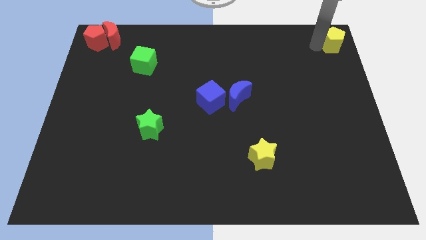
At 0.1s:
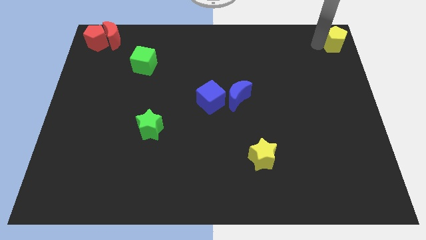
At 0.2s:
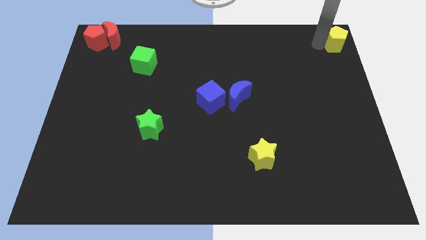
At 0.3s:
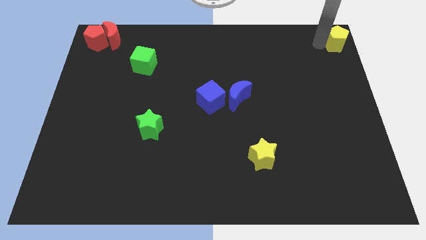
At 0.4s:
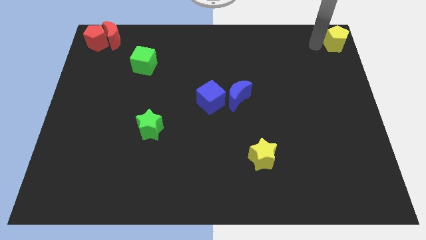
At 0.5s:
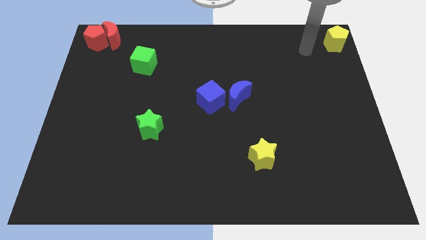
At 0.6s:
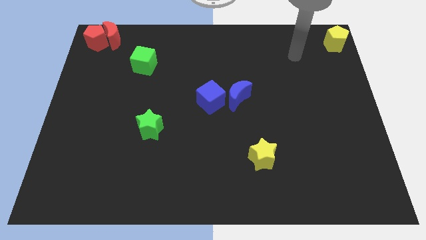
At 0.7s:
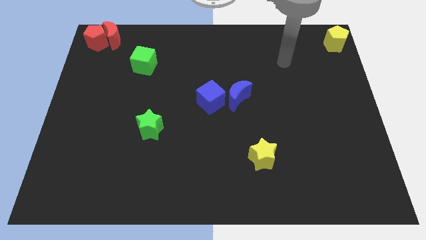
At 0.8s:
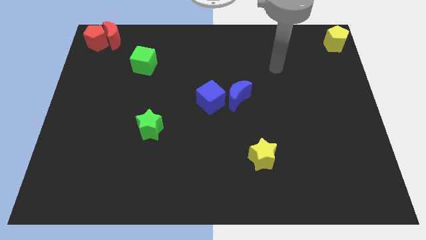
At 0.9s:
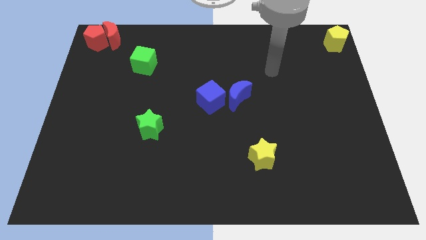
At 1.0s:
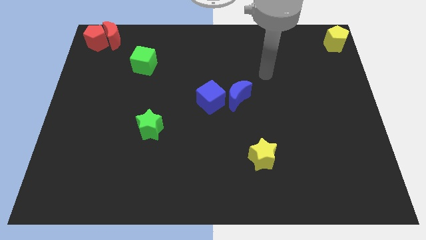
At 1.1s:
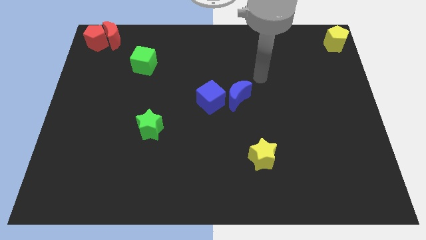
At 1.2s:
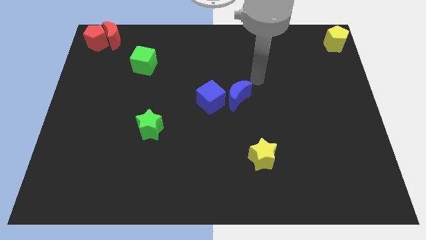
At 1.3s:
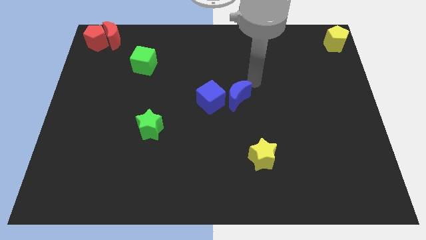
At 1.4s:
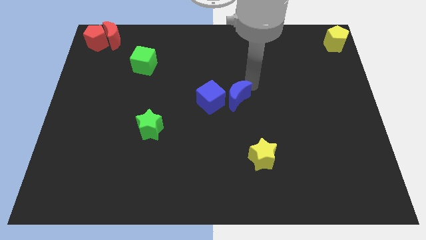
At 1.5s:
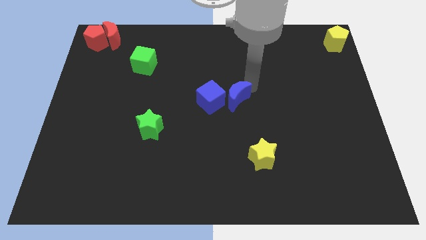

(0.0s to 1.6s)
move your arm away from the yellow pentagon

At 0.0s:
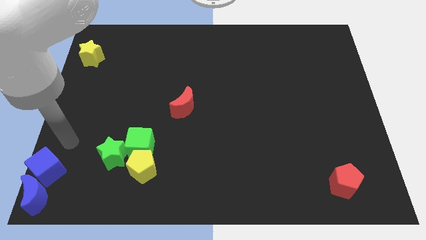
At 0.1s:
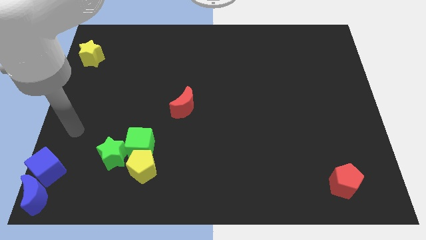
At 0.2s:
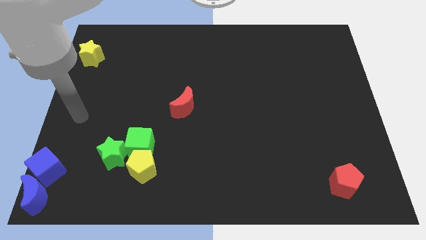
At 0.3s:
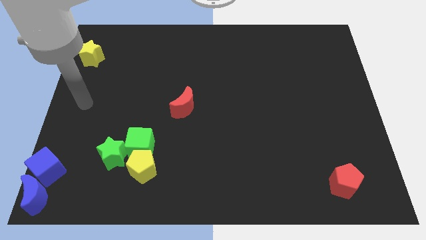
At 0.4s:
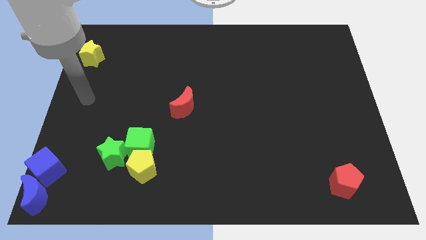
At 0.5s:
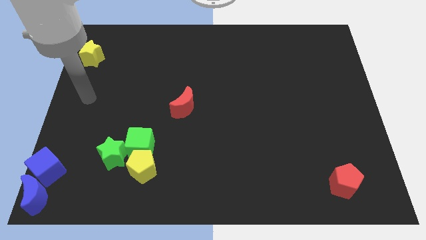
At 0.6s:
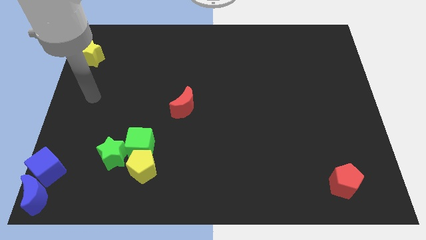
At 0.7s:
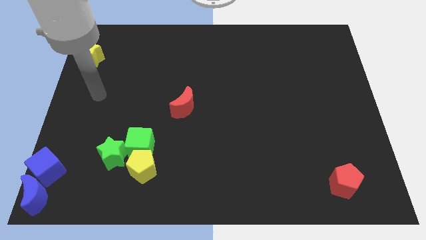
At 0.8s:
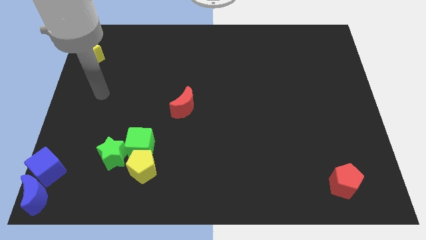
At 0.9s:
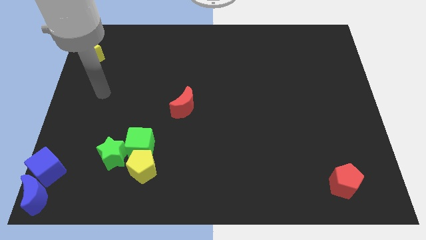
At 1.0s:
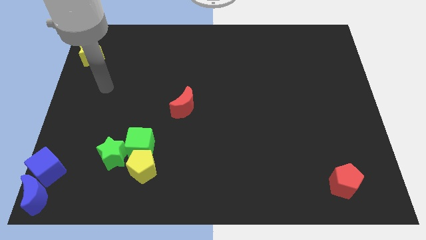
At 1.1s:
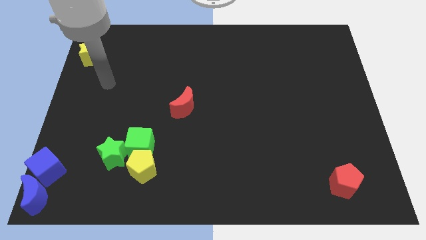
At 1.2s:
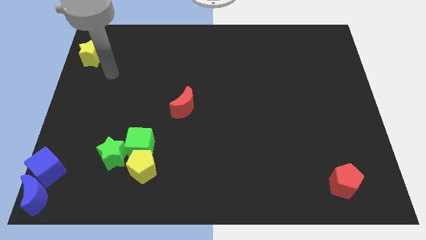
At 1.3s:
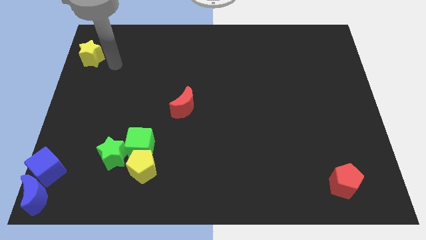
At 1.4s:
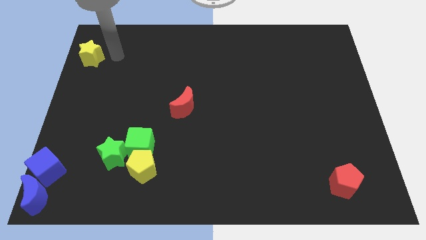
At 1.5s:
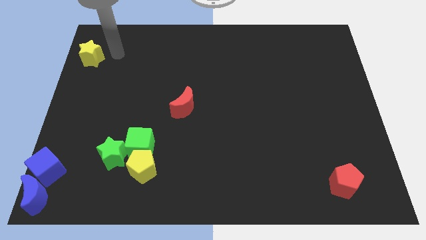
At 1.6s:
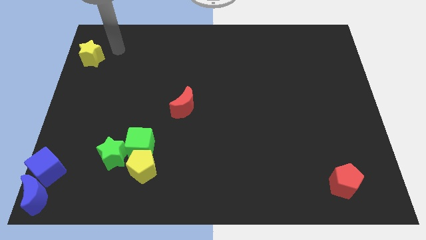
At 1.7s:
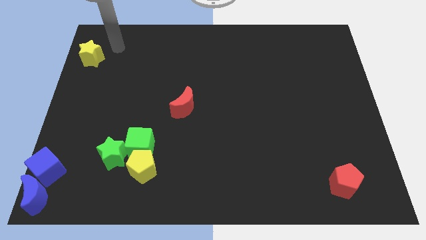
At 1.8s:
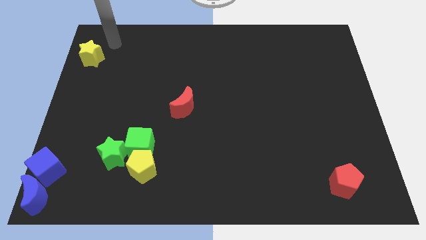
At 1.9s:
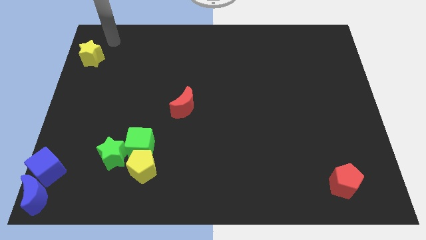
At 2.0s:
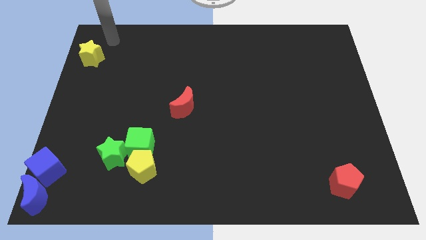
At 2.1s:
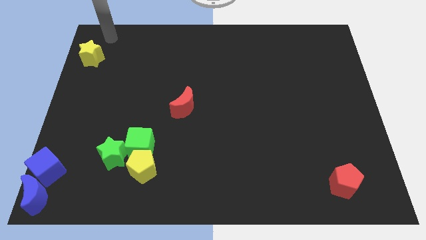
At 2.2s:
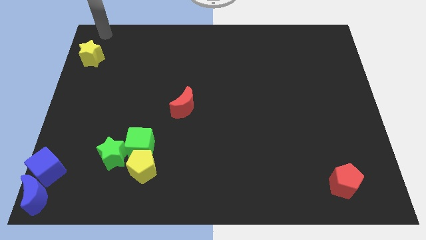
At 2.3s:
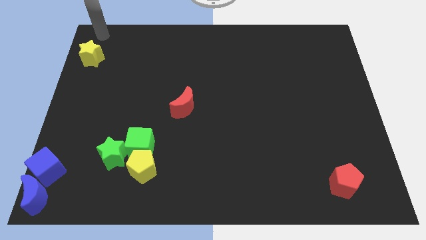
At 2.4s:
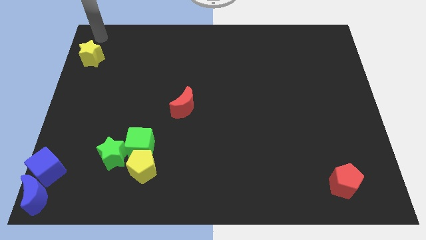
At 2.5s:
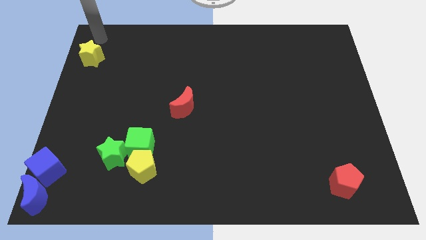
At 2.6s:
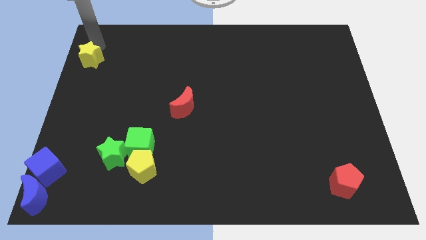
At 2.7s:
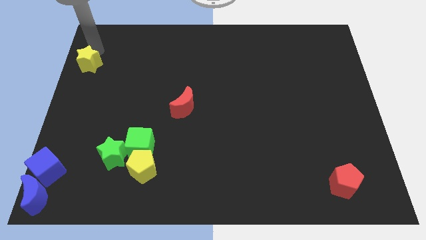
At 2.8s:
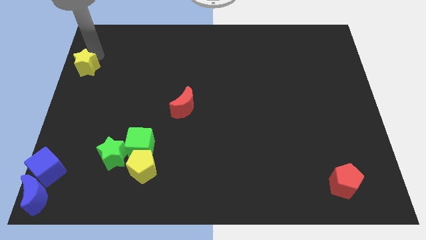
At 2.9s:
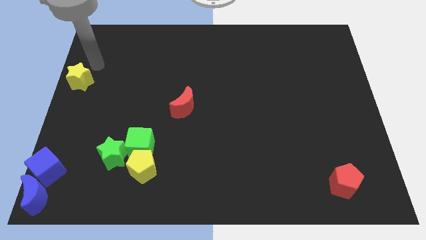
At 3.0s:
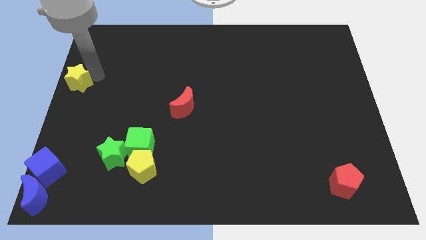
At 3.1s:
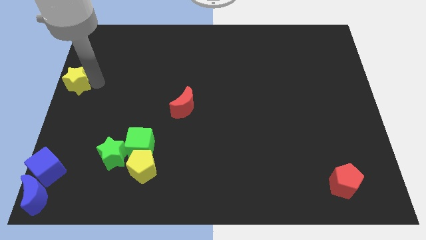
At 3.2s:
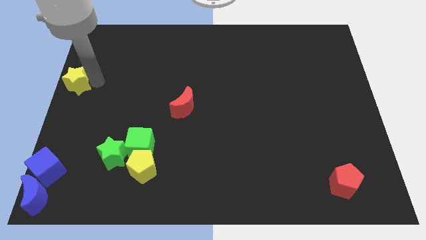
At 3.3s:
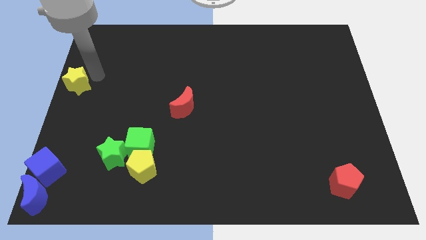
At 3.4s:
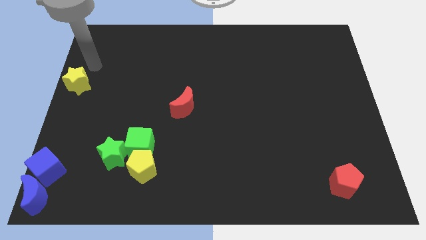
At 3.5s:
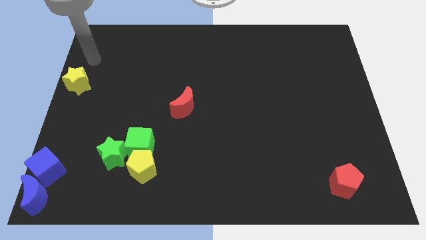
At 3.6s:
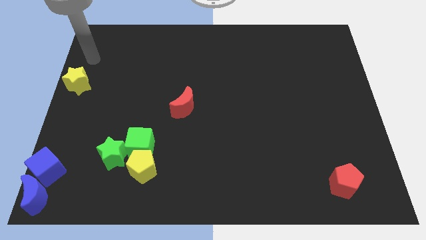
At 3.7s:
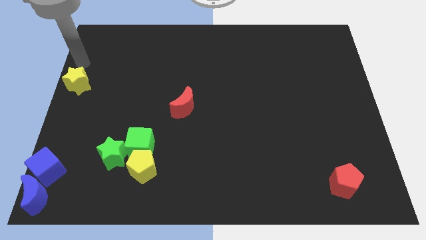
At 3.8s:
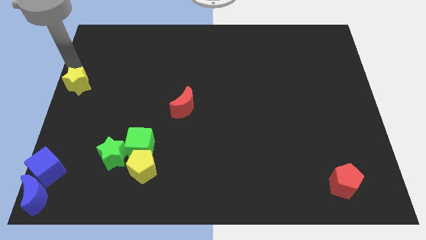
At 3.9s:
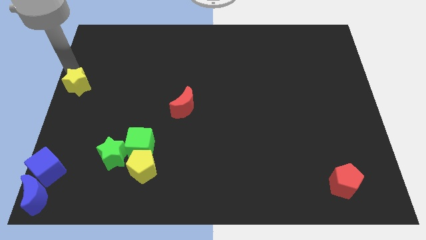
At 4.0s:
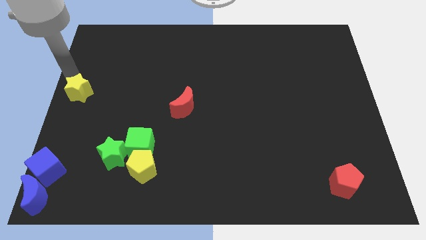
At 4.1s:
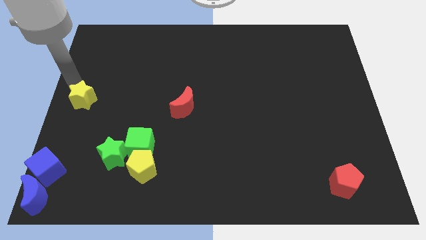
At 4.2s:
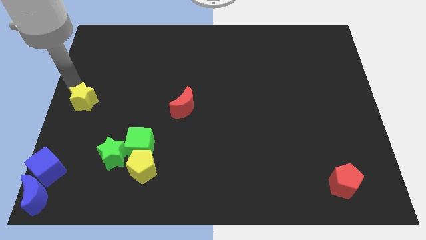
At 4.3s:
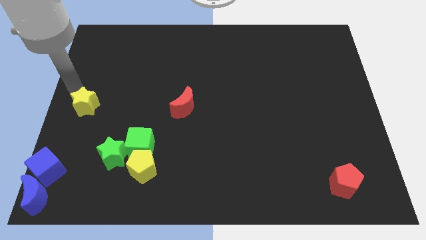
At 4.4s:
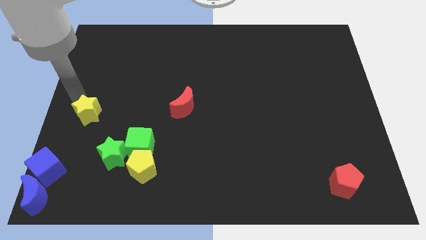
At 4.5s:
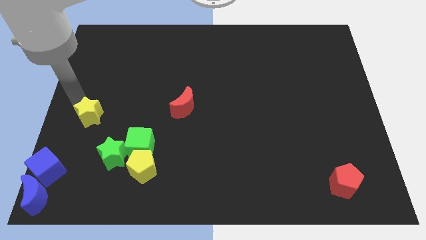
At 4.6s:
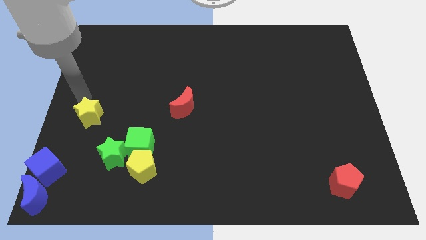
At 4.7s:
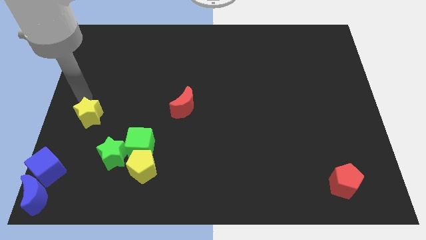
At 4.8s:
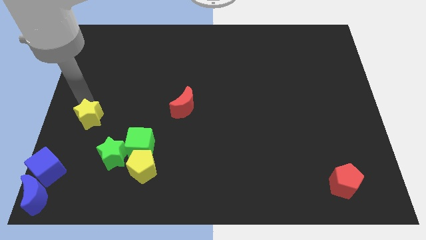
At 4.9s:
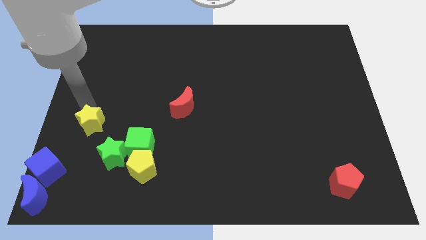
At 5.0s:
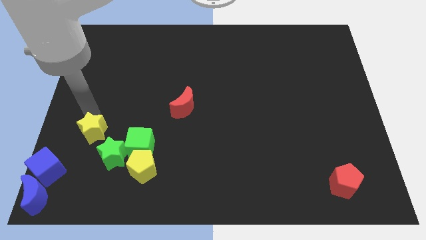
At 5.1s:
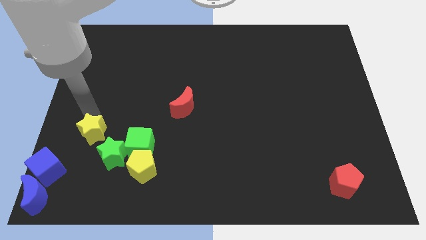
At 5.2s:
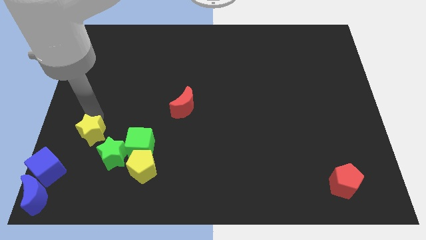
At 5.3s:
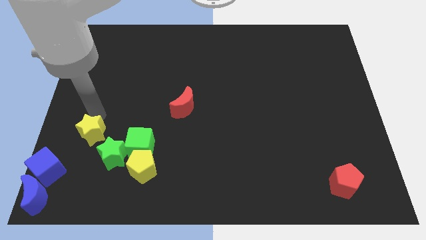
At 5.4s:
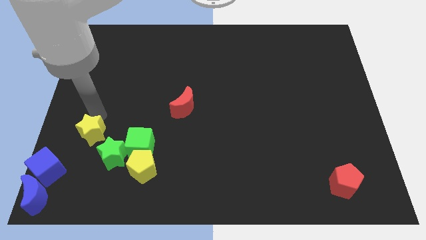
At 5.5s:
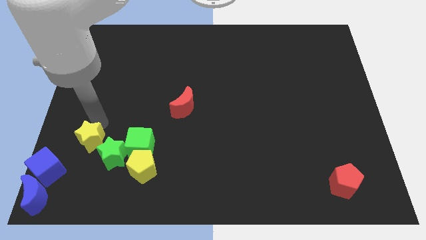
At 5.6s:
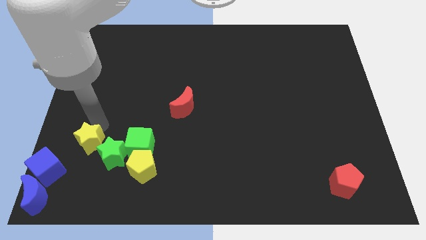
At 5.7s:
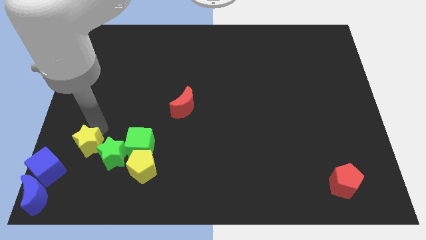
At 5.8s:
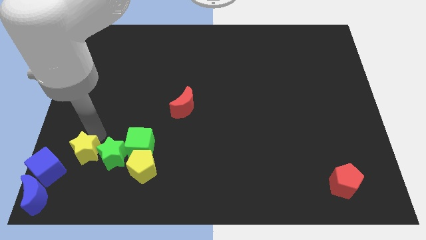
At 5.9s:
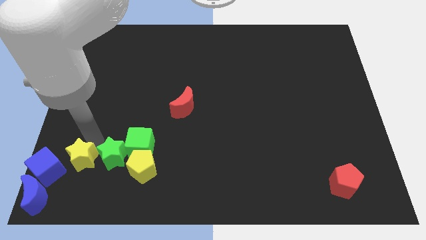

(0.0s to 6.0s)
move the yellow star to the left side of the green star

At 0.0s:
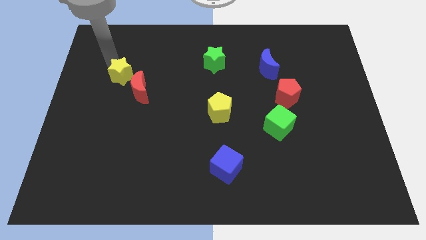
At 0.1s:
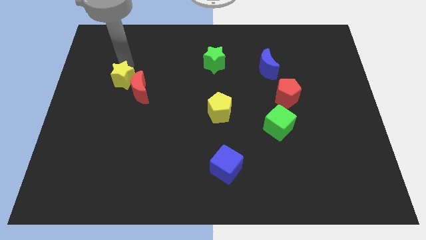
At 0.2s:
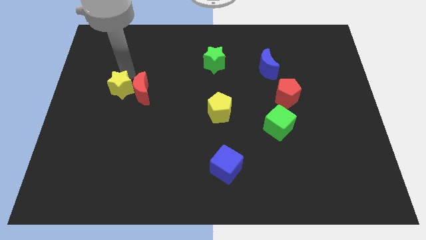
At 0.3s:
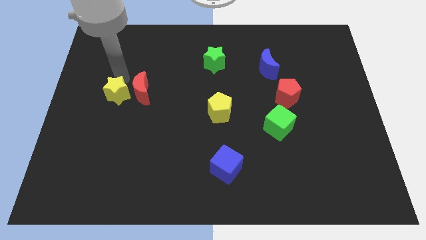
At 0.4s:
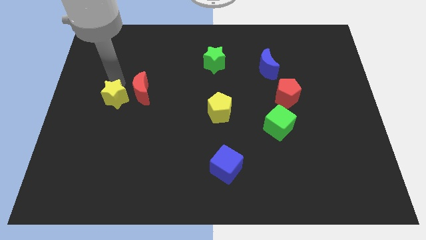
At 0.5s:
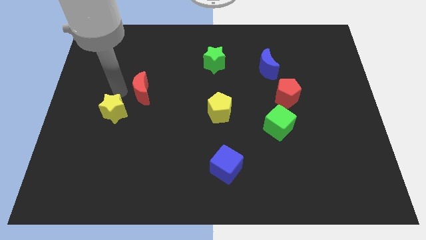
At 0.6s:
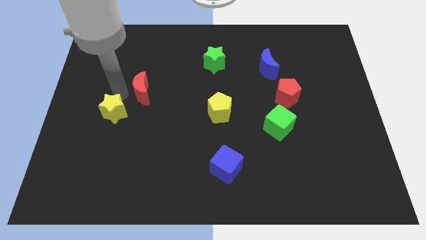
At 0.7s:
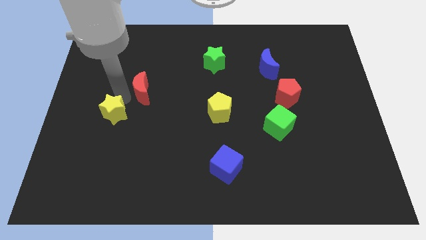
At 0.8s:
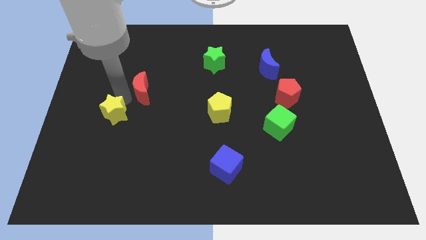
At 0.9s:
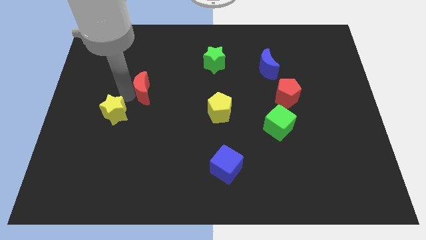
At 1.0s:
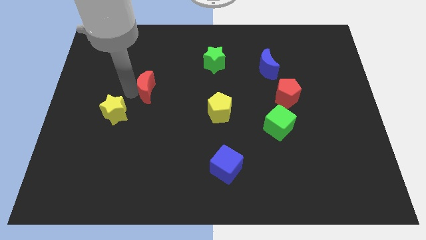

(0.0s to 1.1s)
drag the yellow star slightly to the down

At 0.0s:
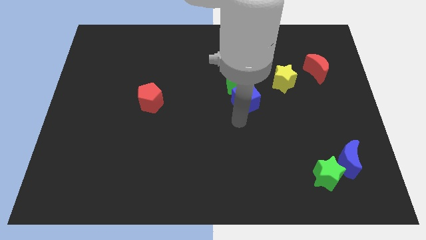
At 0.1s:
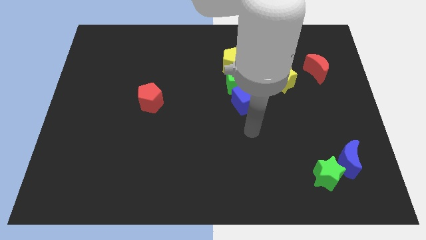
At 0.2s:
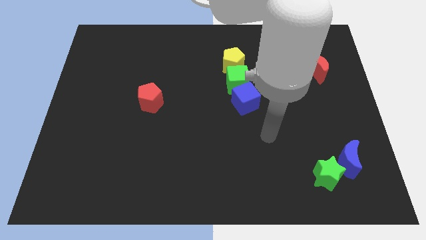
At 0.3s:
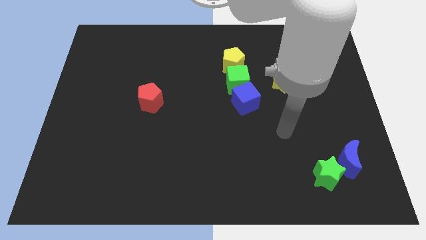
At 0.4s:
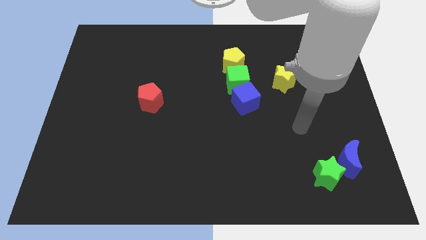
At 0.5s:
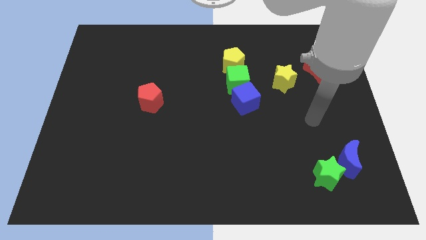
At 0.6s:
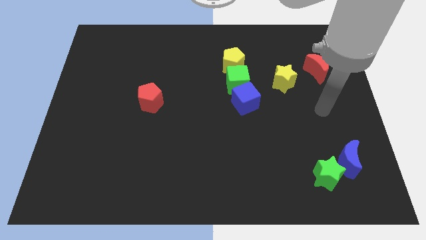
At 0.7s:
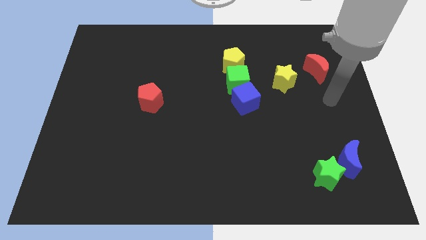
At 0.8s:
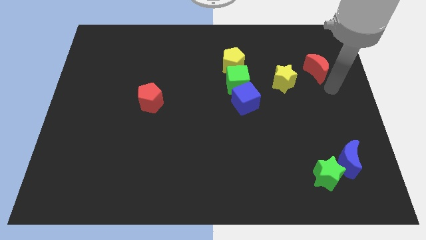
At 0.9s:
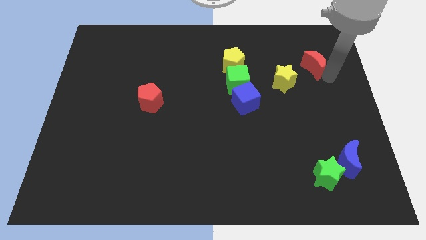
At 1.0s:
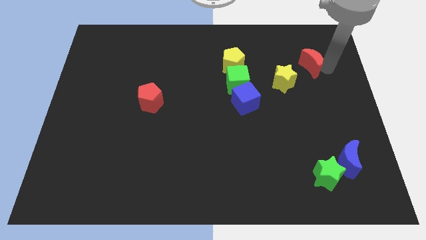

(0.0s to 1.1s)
move your arm towards the right of red crescent
